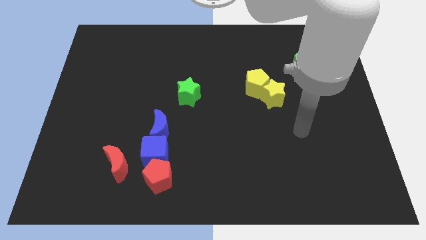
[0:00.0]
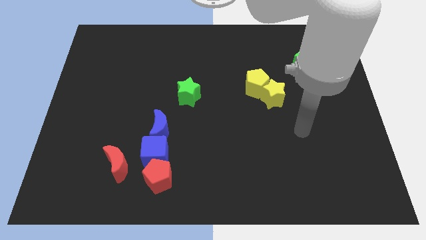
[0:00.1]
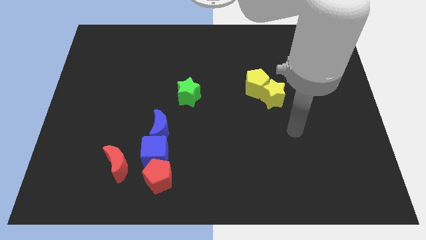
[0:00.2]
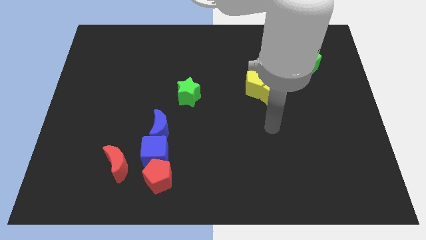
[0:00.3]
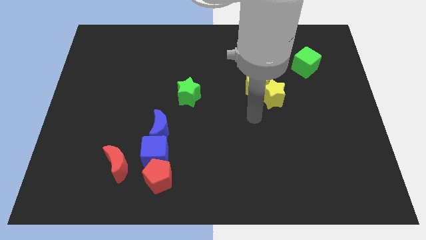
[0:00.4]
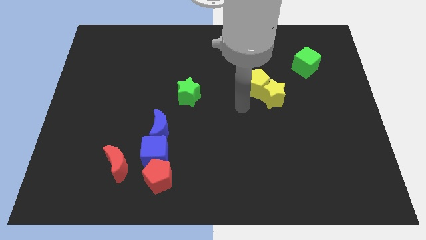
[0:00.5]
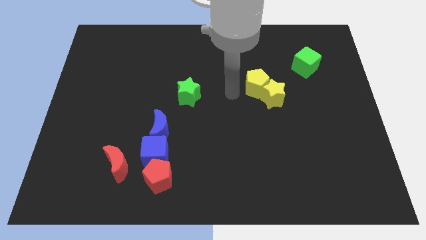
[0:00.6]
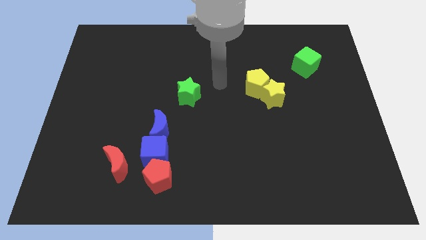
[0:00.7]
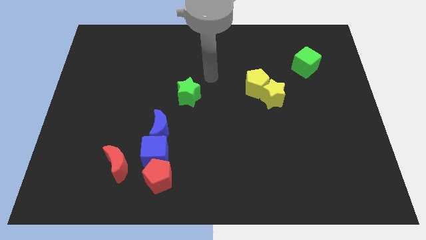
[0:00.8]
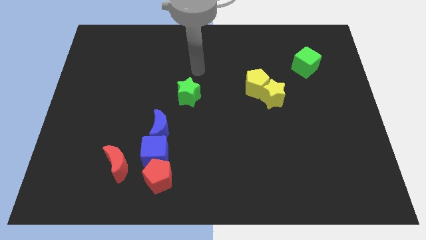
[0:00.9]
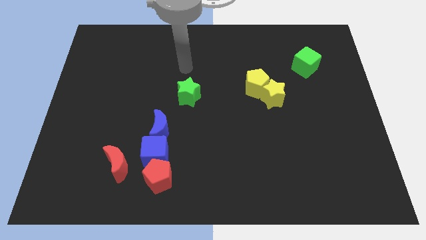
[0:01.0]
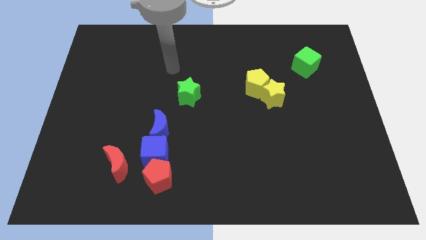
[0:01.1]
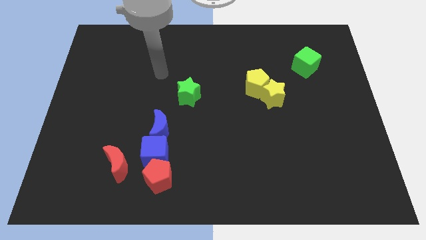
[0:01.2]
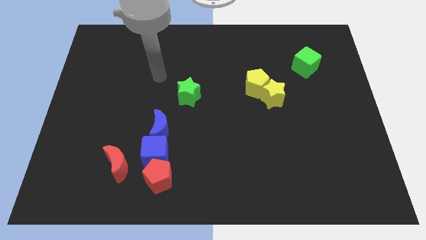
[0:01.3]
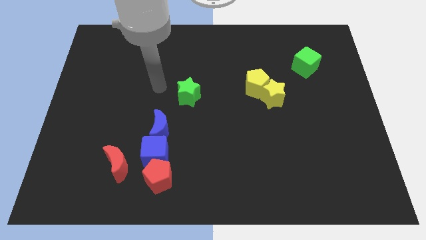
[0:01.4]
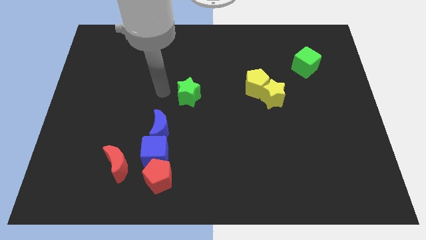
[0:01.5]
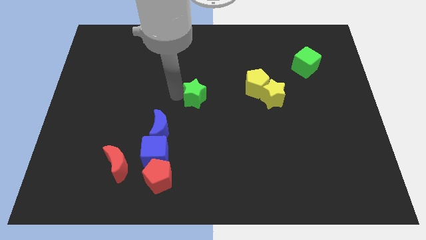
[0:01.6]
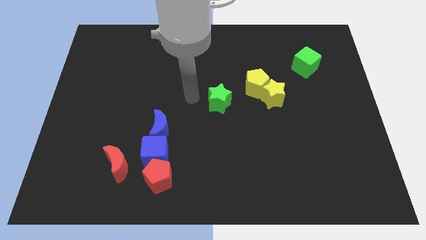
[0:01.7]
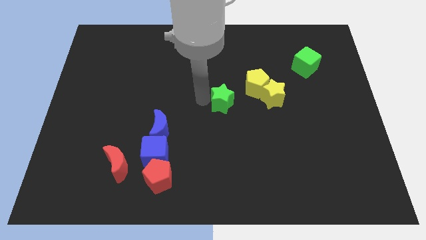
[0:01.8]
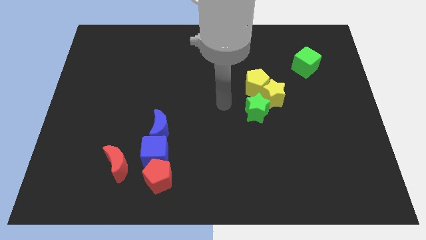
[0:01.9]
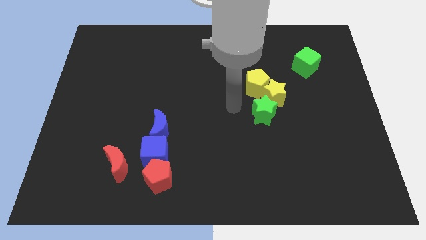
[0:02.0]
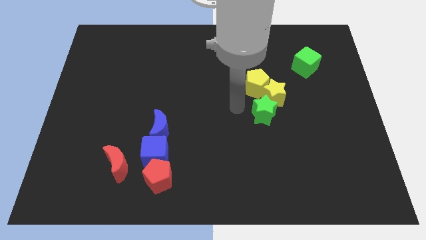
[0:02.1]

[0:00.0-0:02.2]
push the green star next to the yellow star

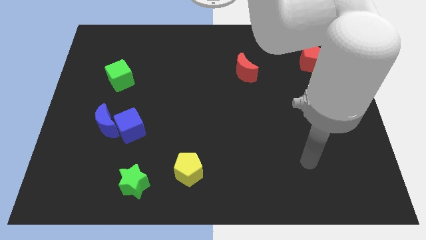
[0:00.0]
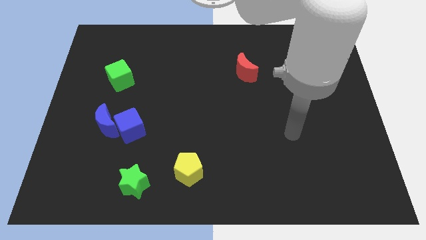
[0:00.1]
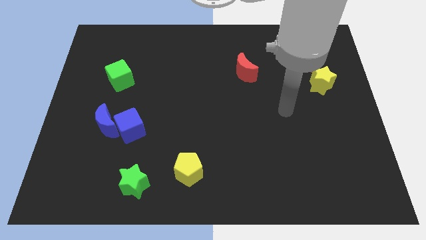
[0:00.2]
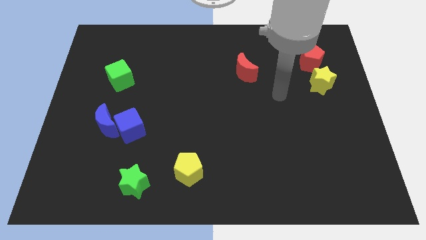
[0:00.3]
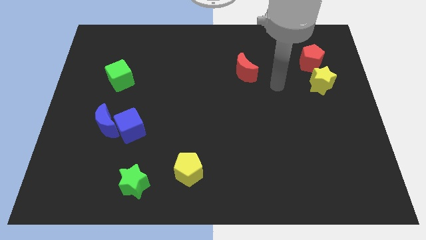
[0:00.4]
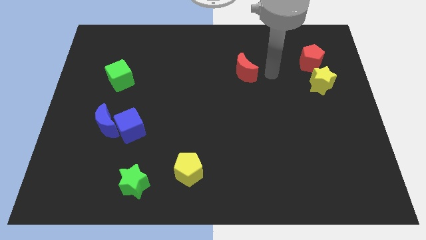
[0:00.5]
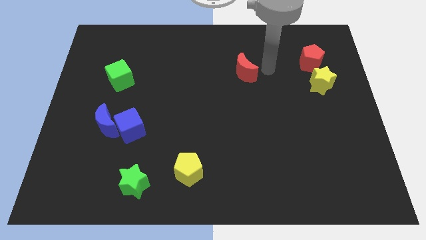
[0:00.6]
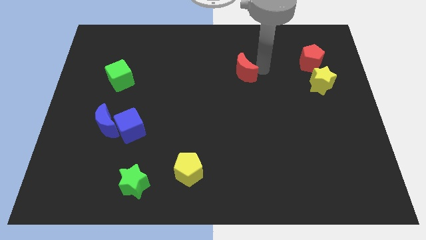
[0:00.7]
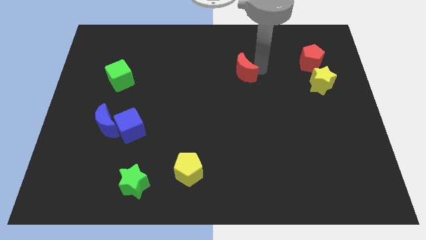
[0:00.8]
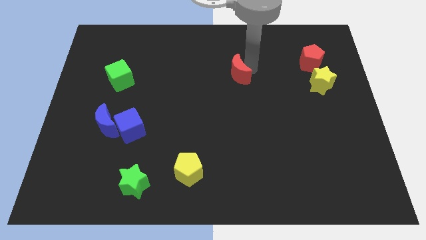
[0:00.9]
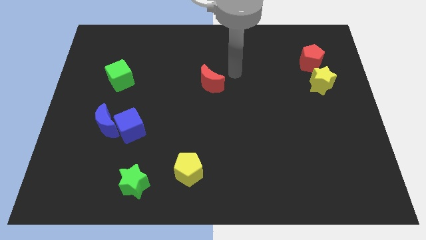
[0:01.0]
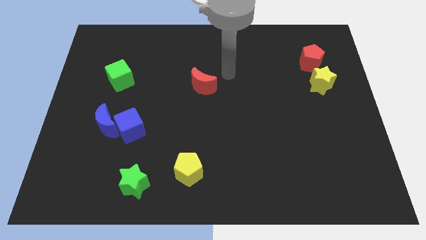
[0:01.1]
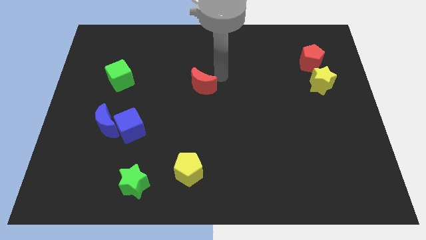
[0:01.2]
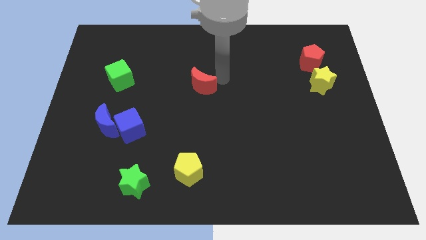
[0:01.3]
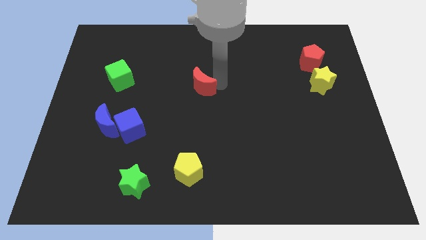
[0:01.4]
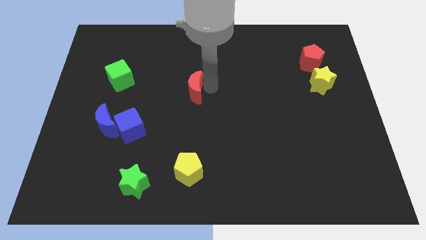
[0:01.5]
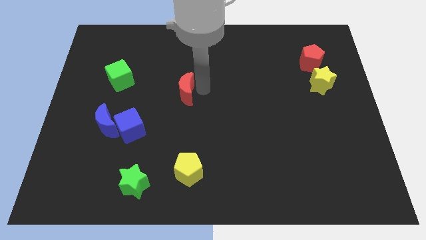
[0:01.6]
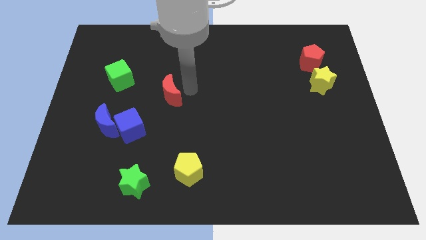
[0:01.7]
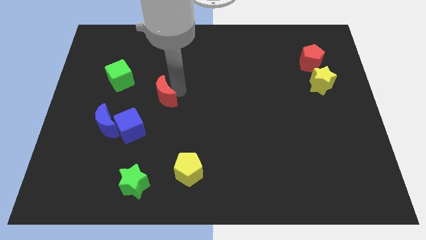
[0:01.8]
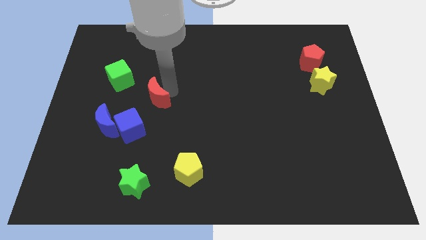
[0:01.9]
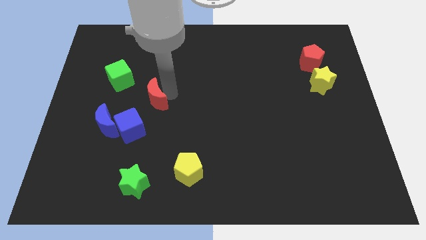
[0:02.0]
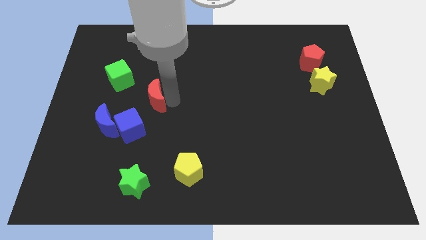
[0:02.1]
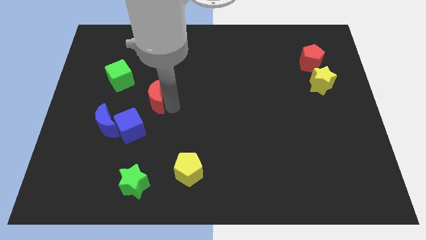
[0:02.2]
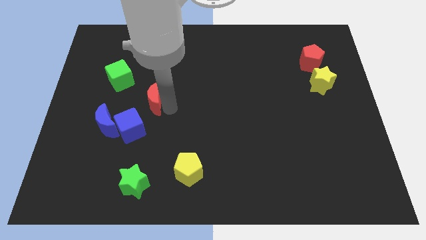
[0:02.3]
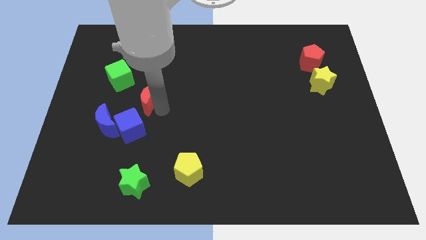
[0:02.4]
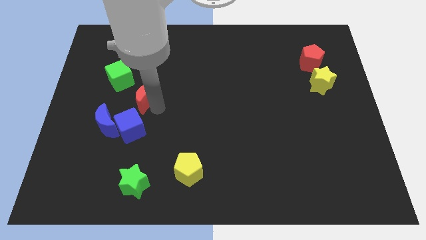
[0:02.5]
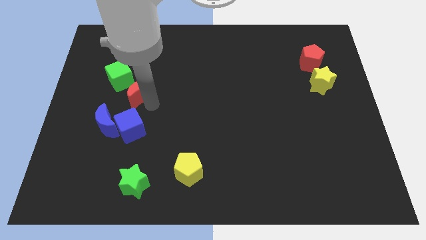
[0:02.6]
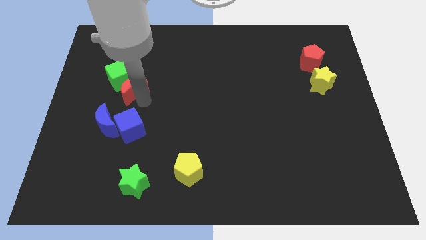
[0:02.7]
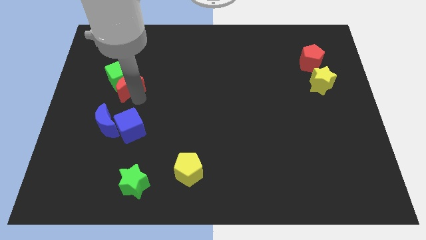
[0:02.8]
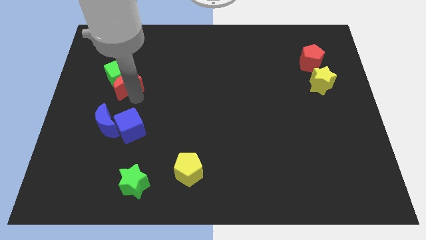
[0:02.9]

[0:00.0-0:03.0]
move the red moon close to the green cube

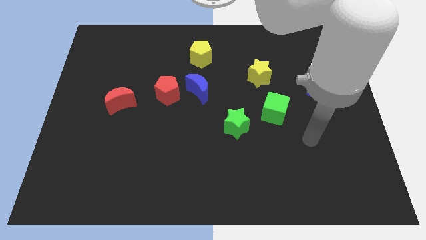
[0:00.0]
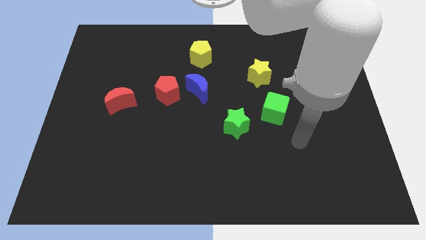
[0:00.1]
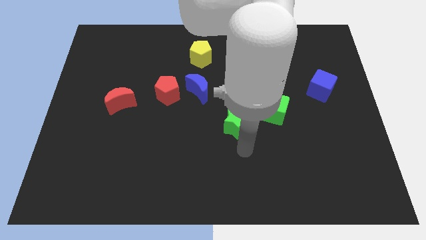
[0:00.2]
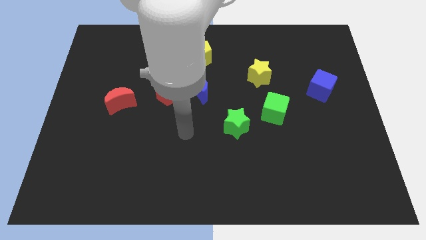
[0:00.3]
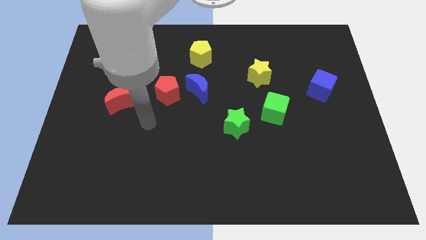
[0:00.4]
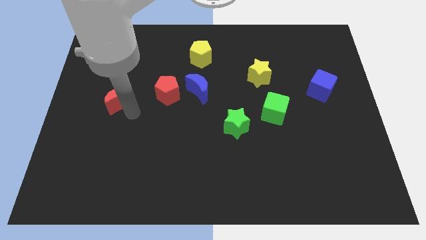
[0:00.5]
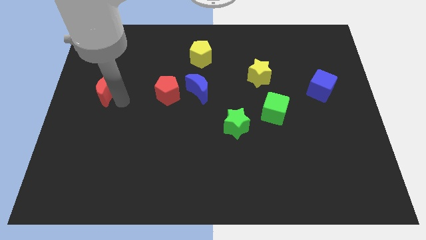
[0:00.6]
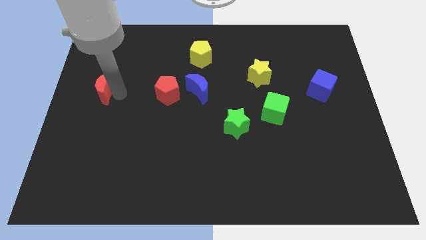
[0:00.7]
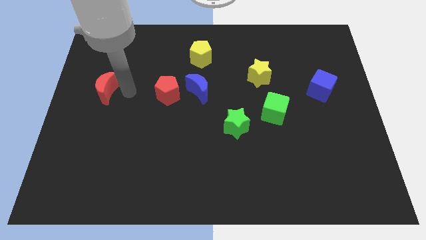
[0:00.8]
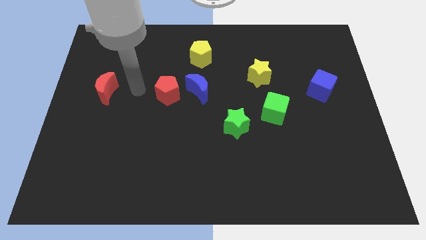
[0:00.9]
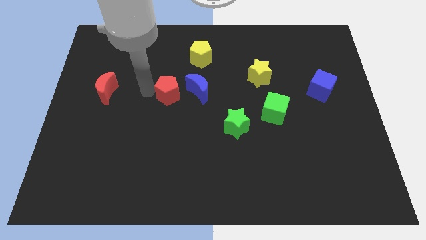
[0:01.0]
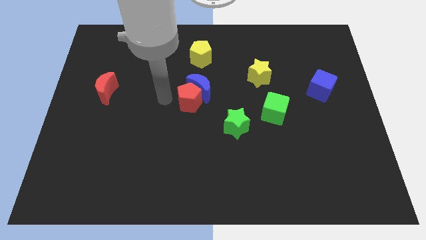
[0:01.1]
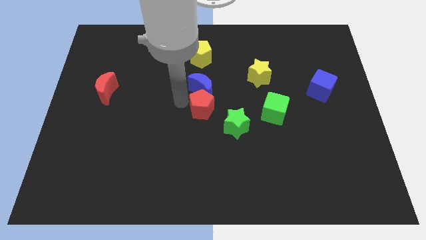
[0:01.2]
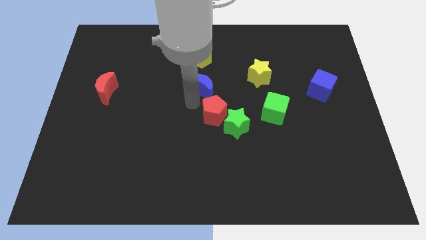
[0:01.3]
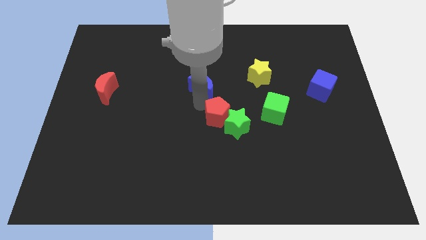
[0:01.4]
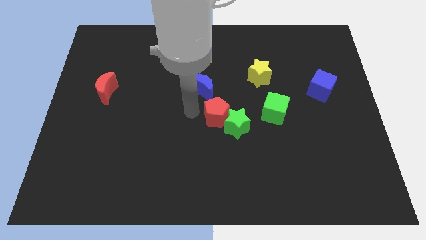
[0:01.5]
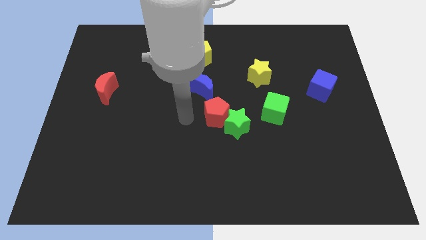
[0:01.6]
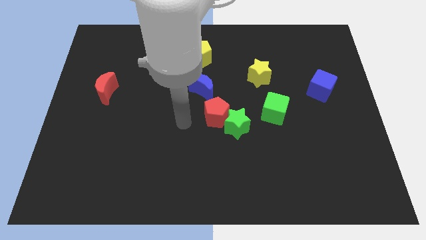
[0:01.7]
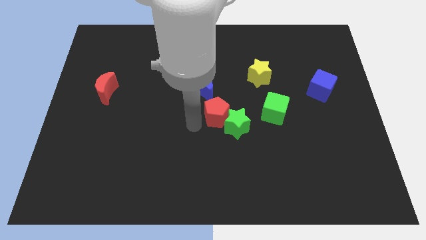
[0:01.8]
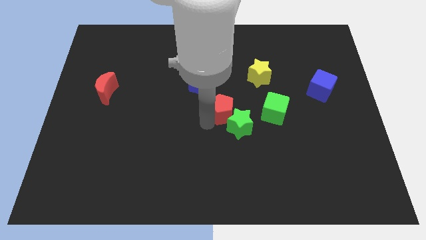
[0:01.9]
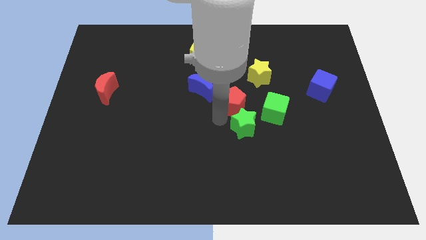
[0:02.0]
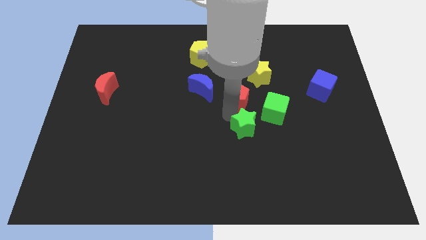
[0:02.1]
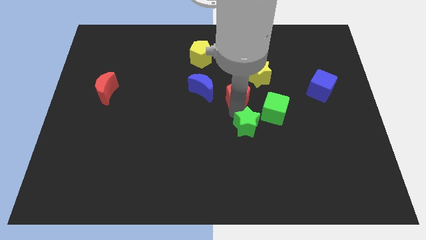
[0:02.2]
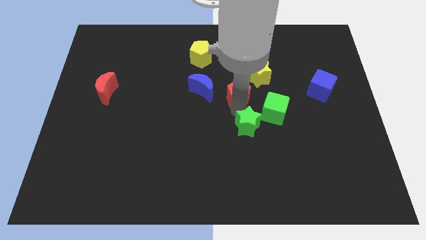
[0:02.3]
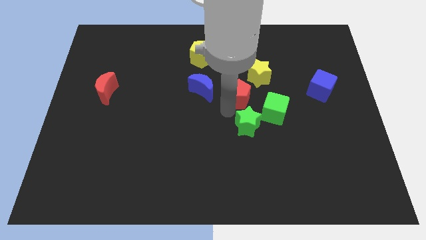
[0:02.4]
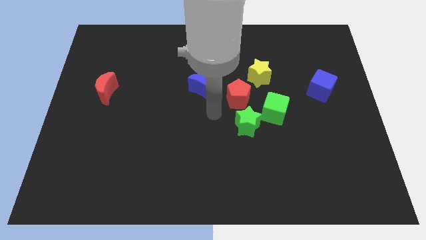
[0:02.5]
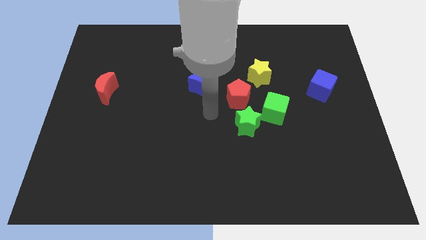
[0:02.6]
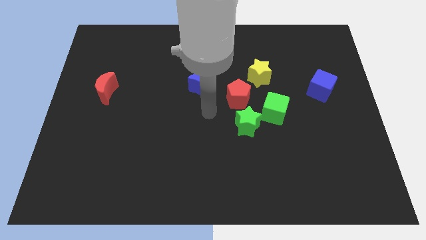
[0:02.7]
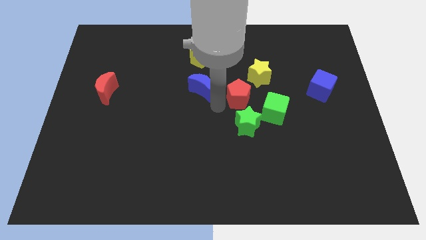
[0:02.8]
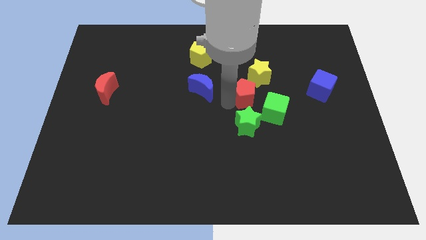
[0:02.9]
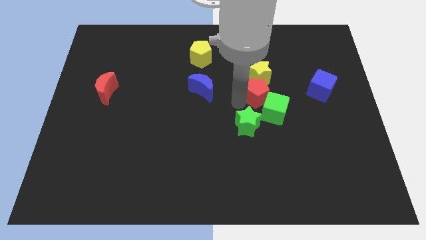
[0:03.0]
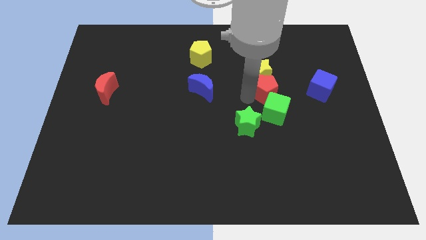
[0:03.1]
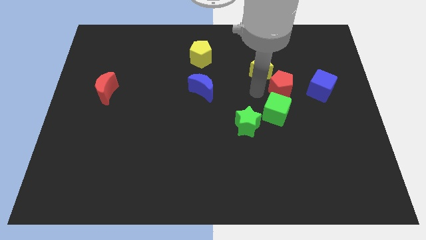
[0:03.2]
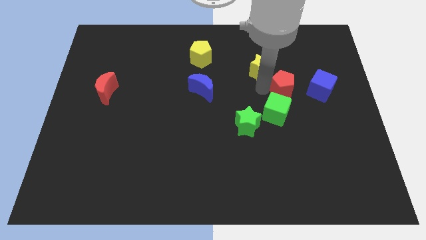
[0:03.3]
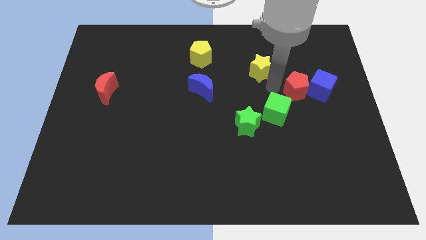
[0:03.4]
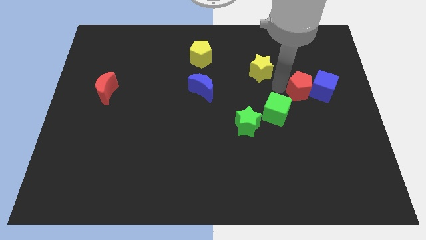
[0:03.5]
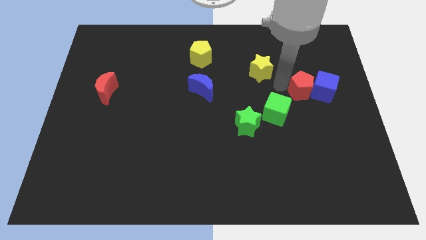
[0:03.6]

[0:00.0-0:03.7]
push the red pentagon close to the blue cube
